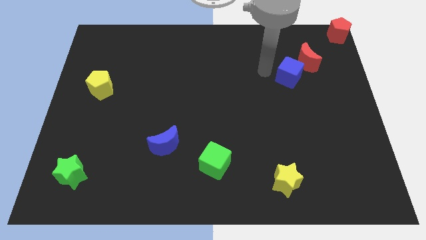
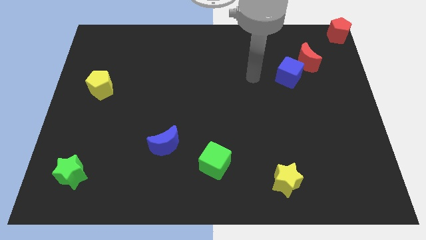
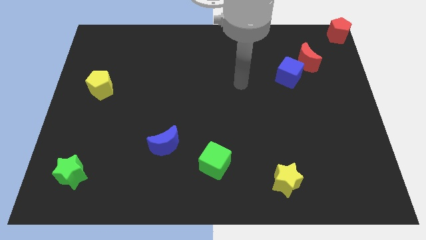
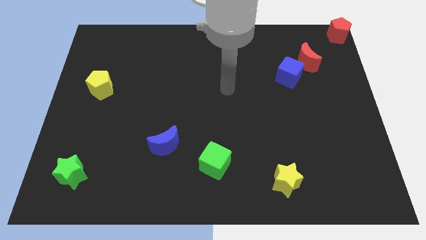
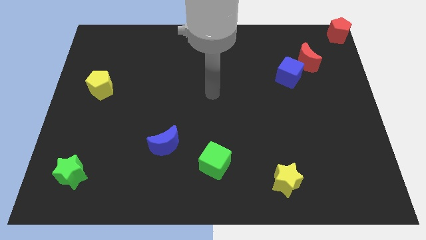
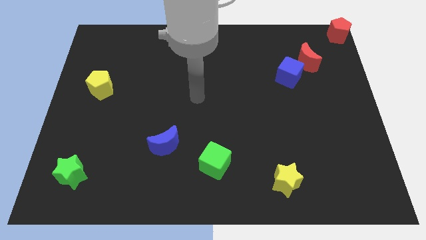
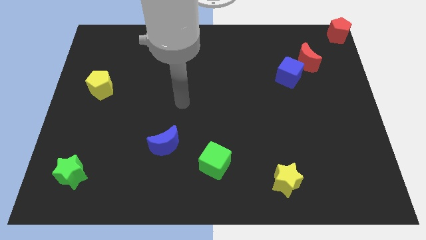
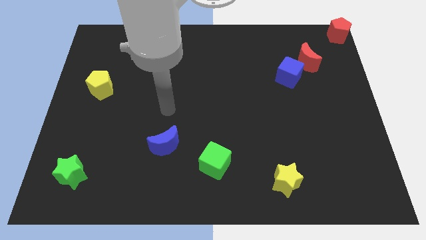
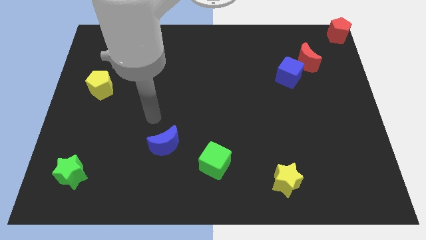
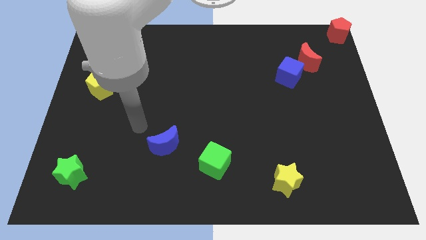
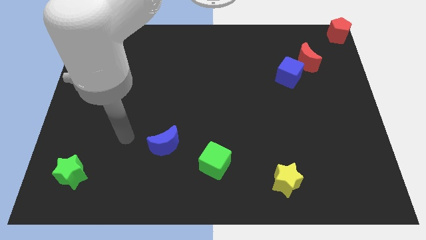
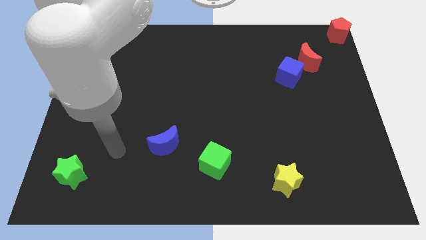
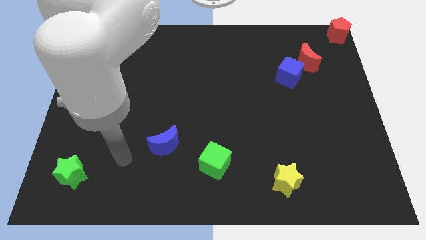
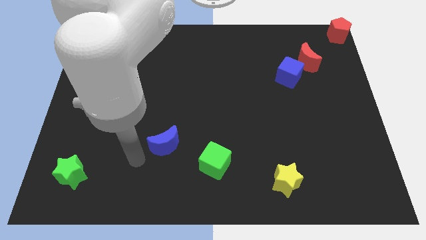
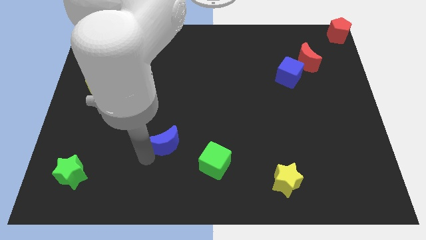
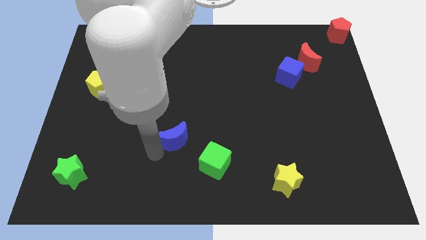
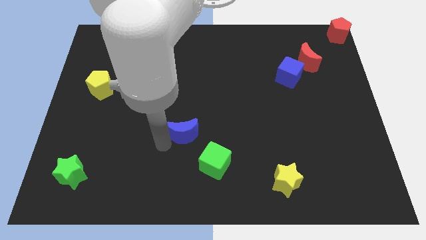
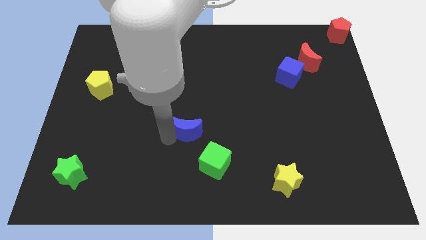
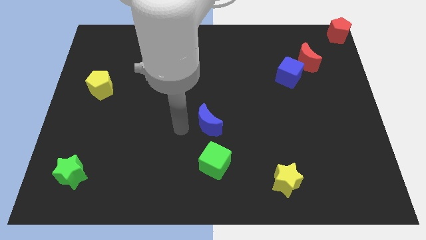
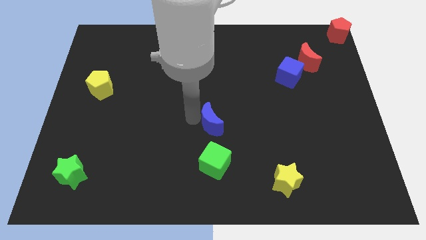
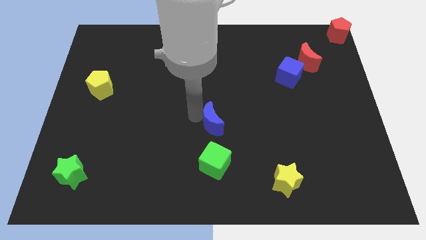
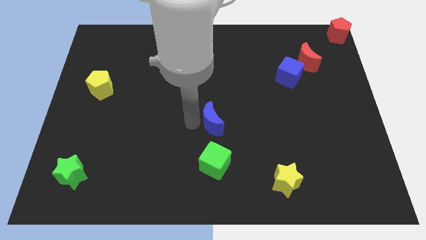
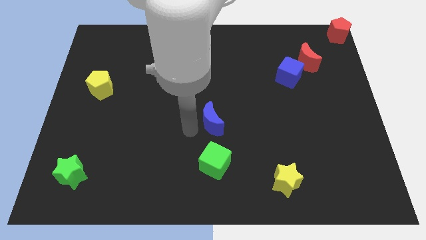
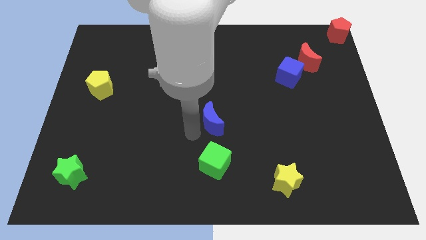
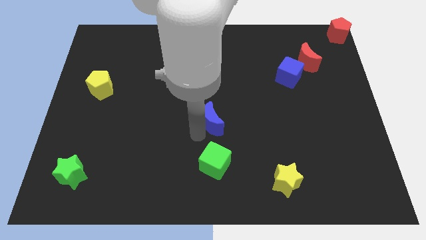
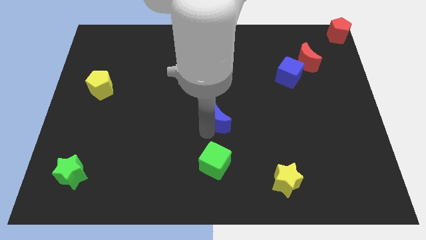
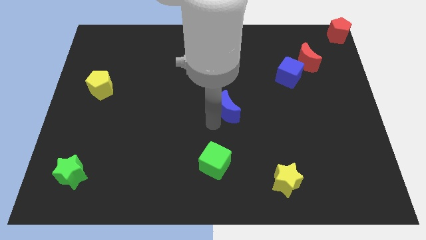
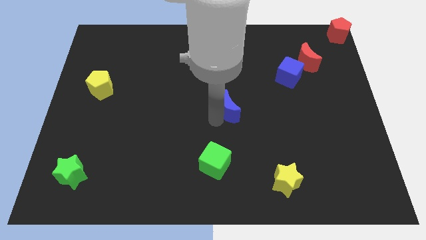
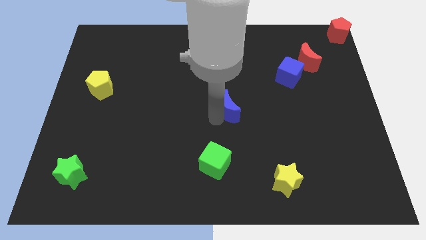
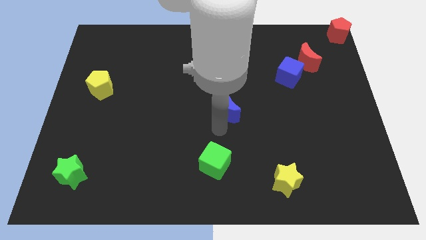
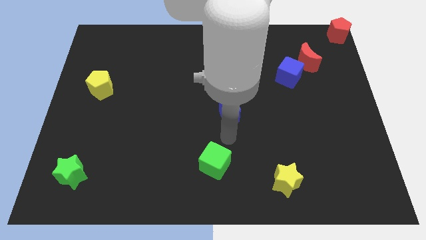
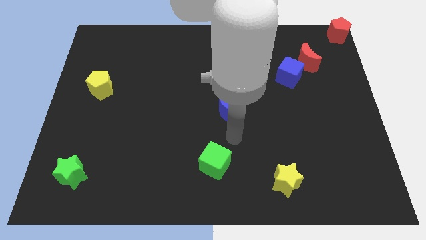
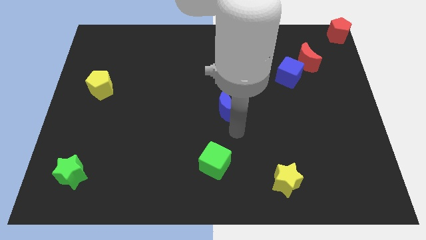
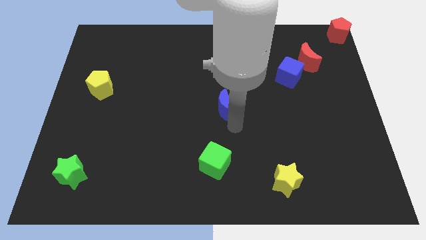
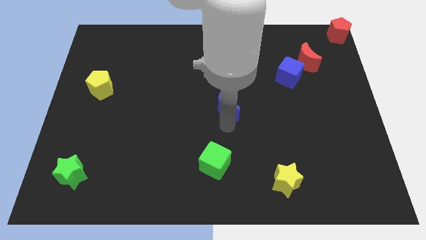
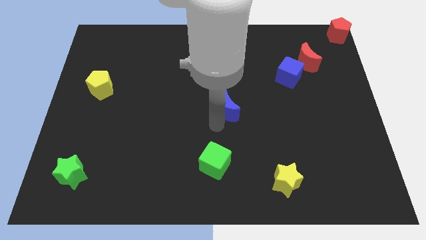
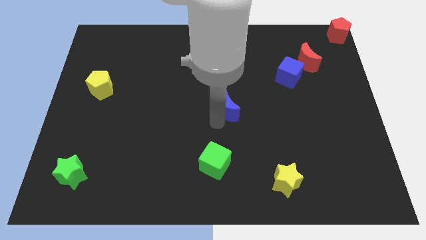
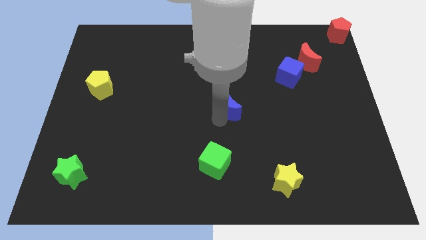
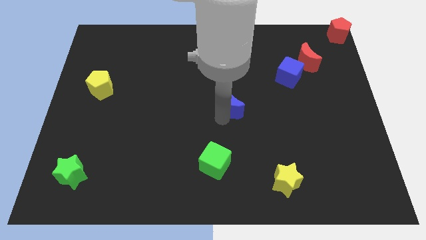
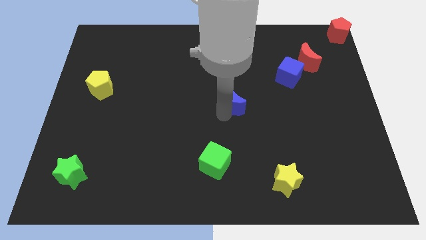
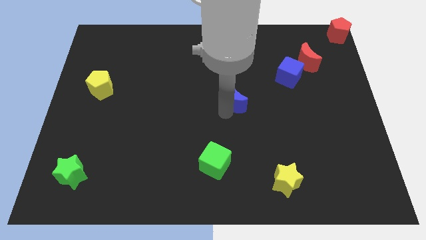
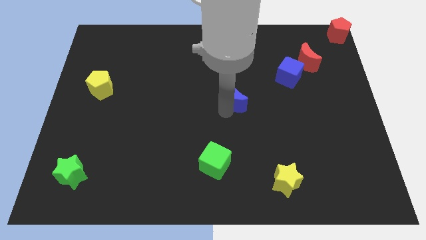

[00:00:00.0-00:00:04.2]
move the blue crescent to the top right of the green cube

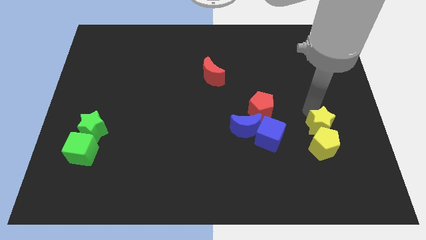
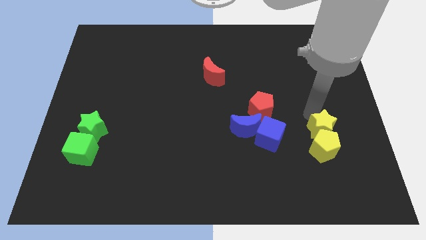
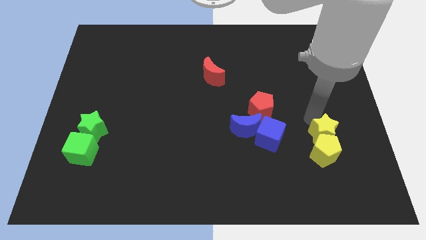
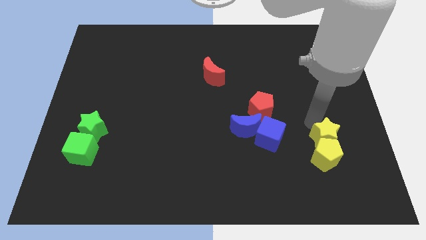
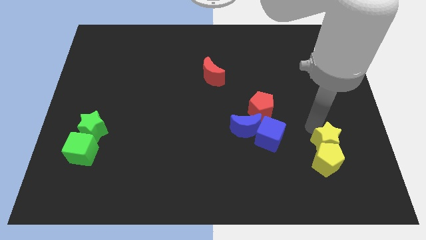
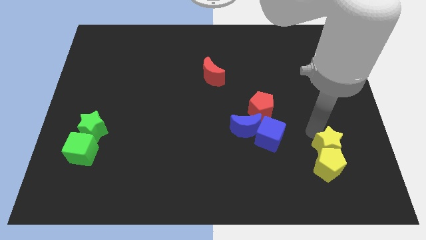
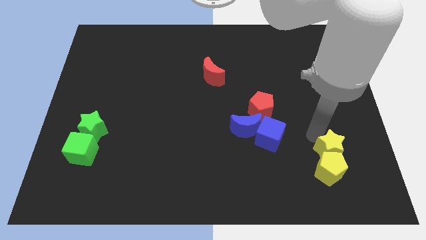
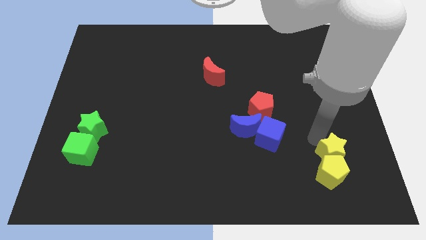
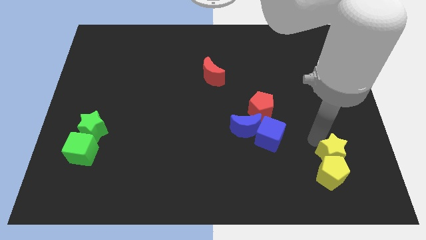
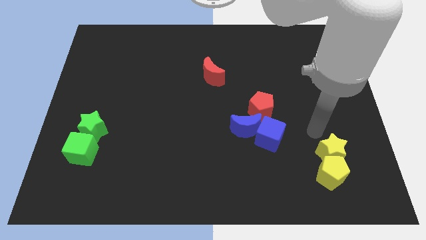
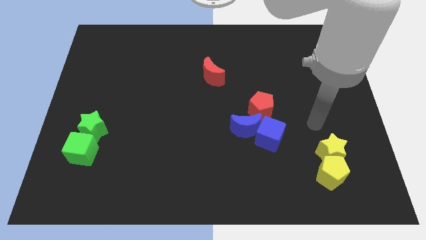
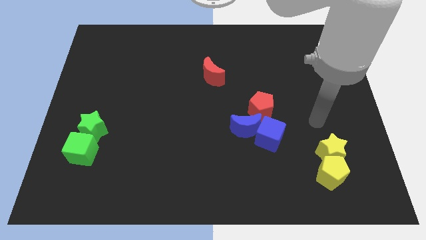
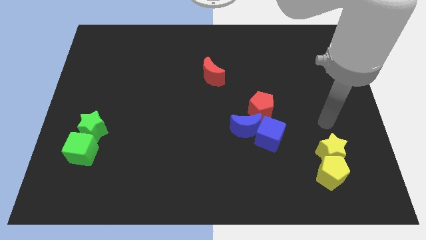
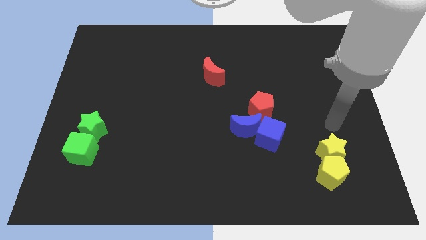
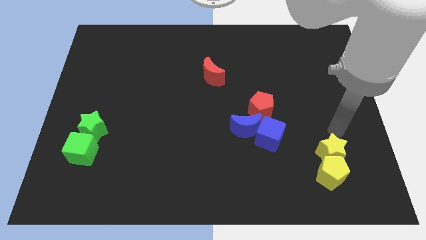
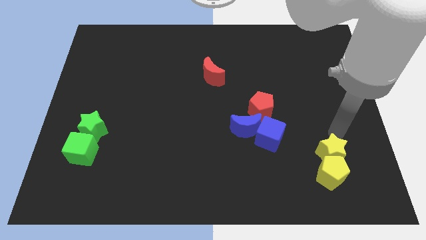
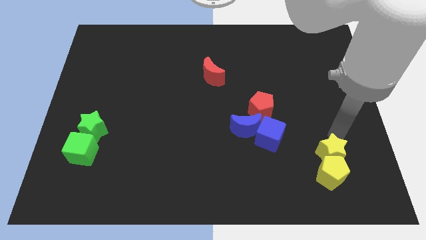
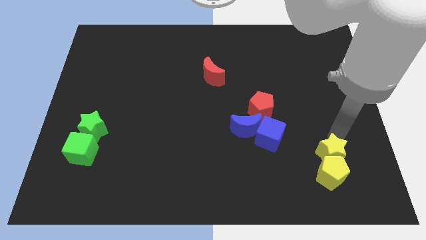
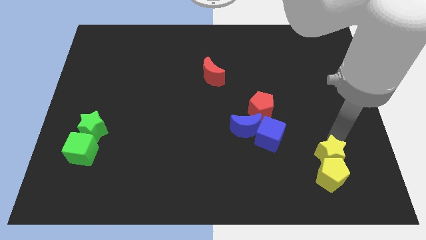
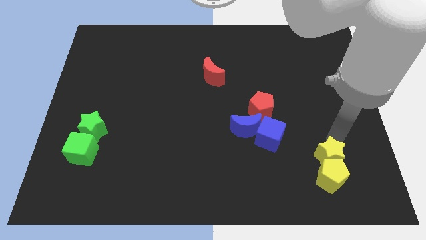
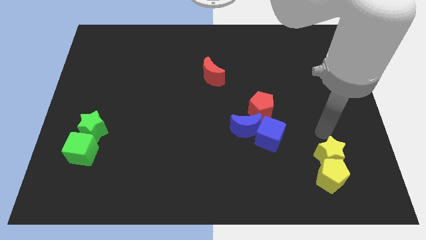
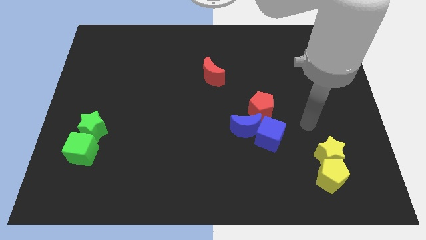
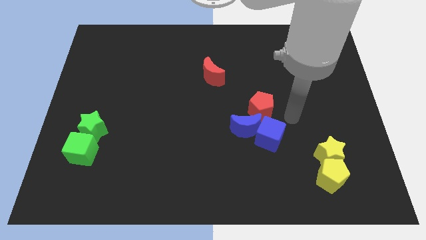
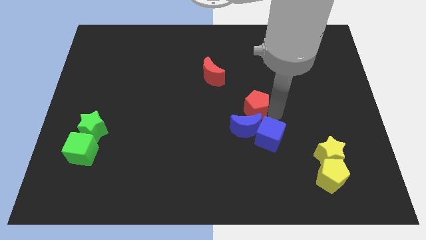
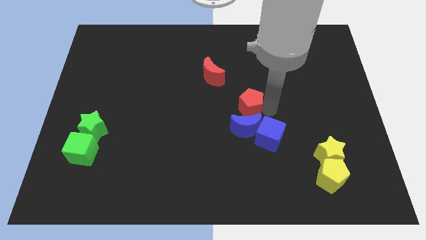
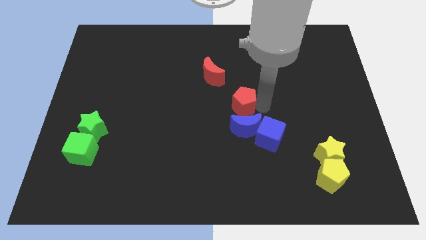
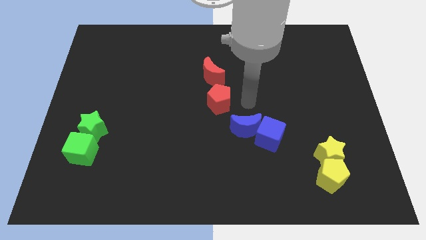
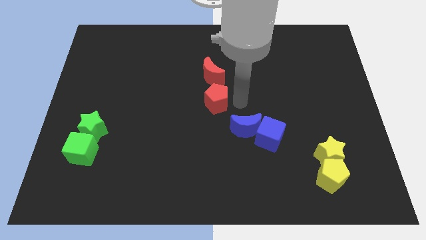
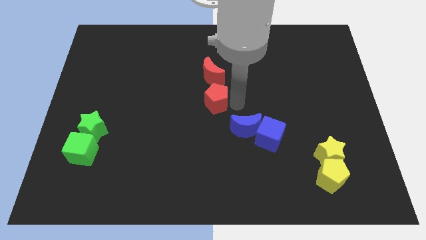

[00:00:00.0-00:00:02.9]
slightly move the yellow blocks towards down

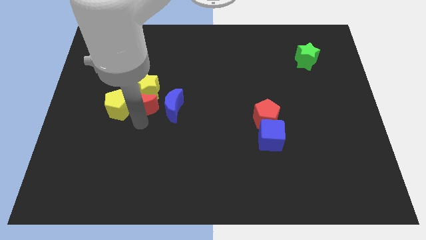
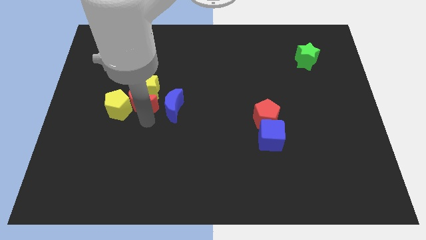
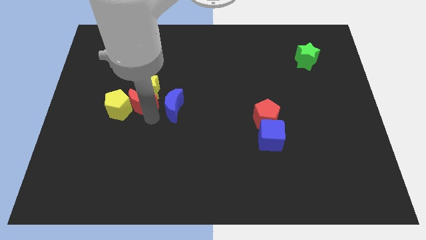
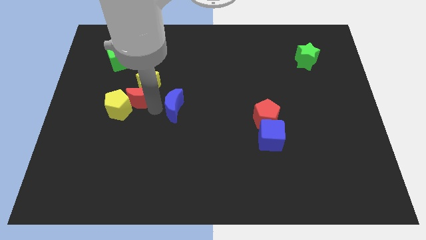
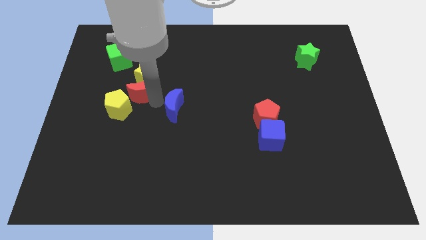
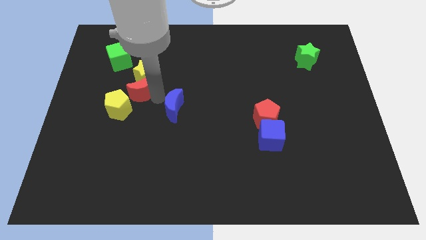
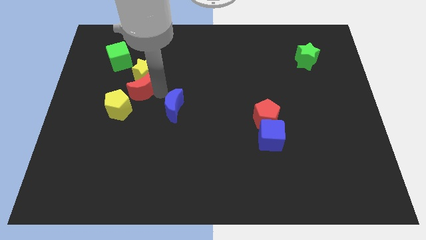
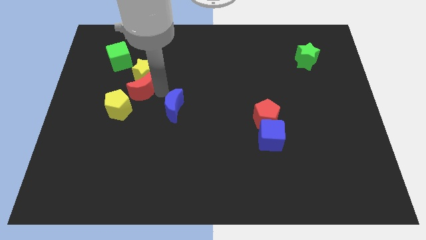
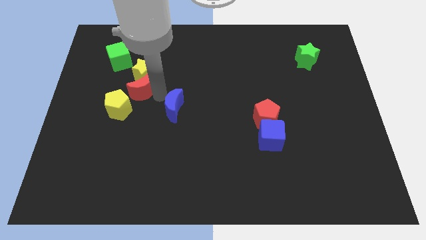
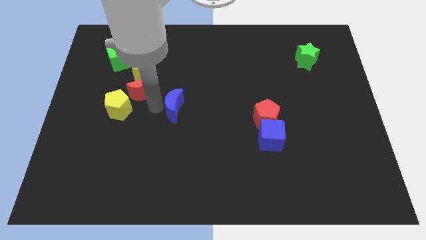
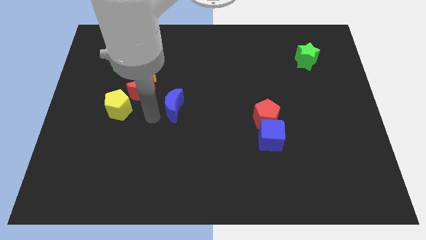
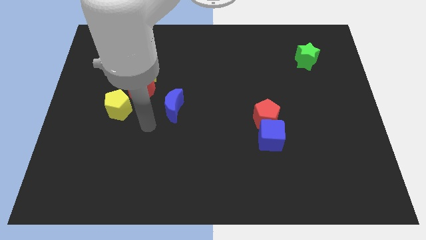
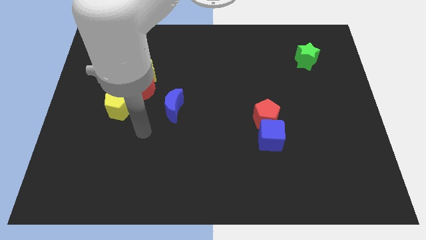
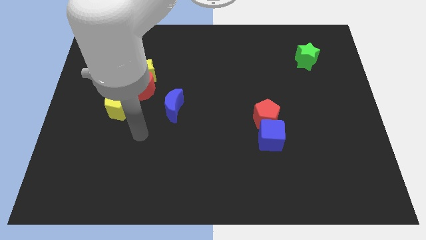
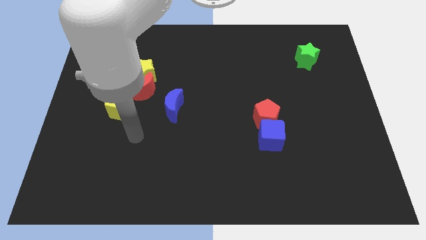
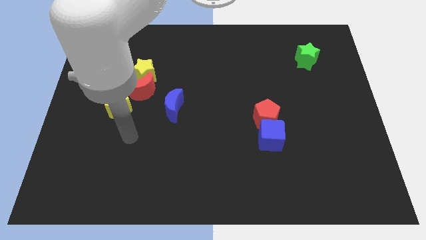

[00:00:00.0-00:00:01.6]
drag red crescent towards the yellow star

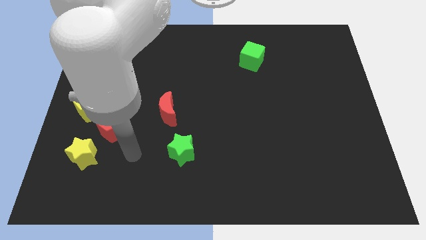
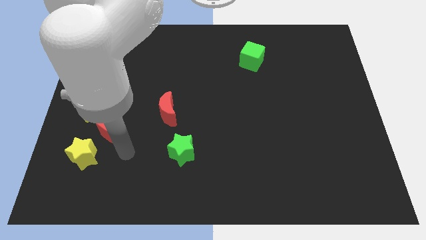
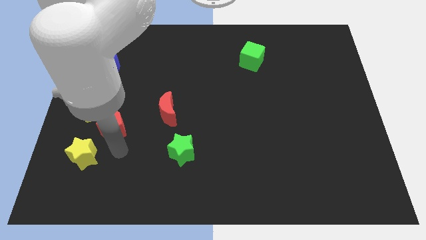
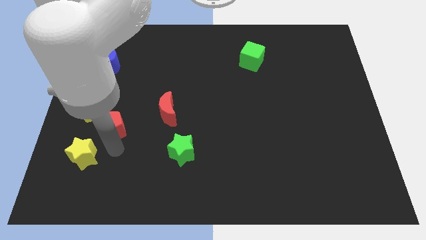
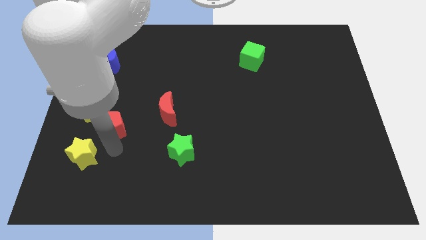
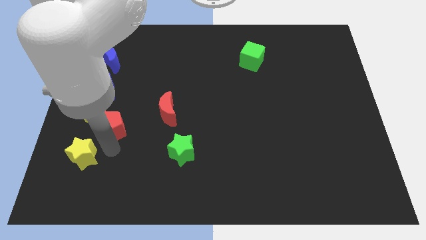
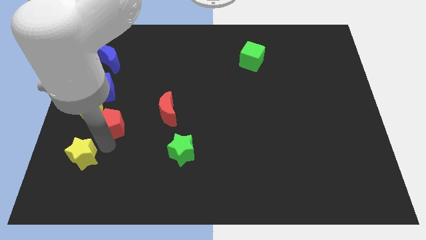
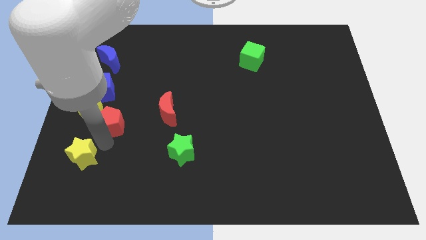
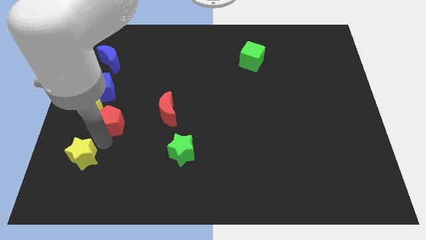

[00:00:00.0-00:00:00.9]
touch at the bottom side of the red pentagon
